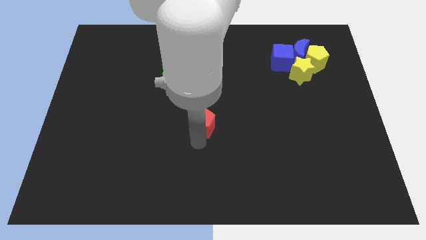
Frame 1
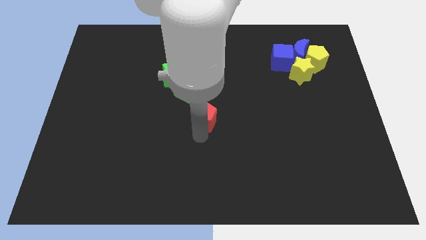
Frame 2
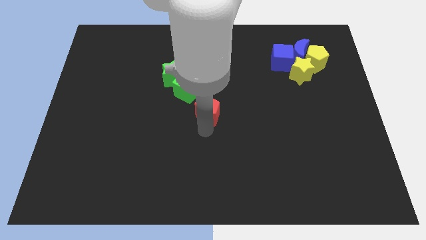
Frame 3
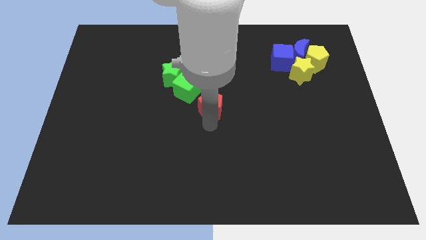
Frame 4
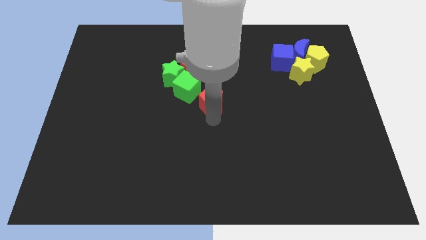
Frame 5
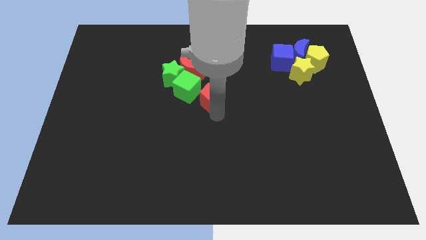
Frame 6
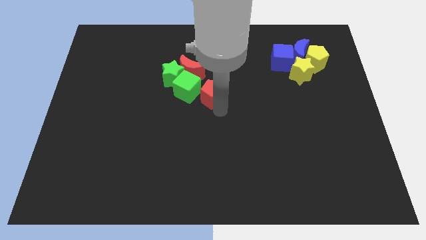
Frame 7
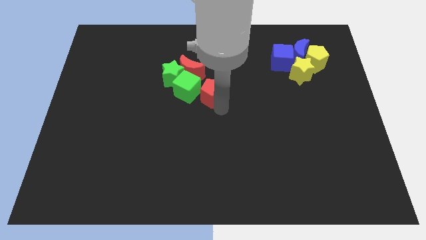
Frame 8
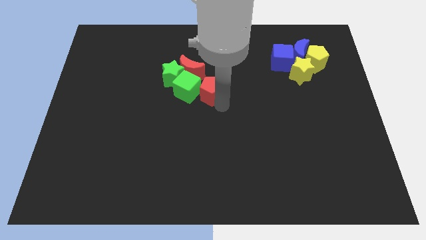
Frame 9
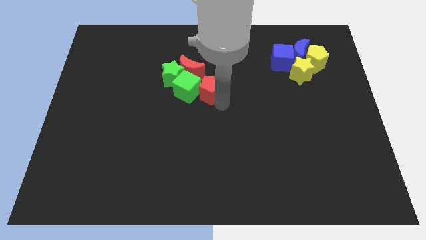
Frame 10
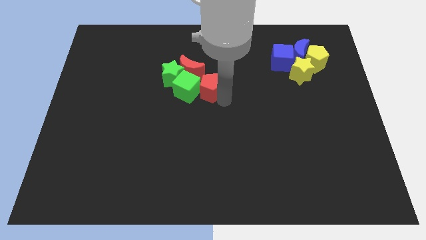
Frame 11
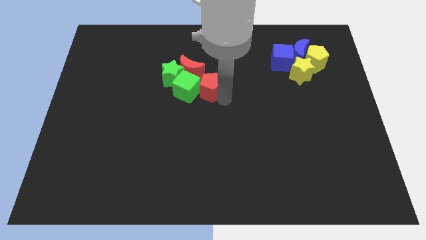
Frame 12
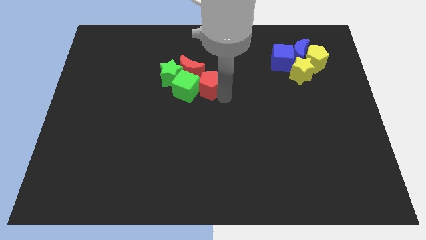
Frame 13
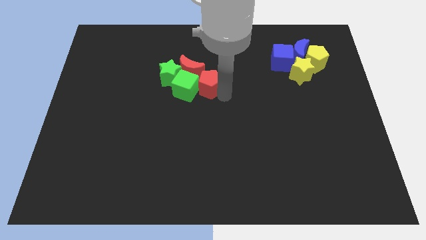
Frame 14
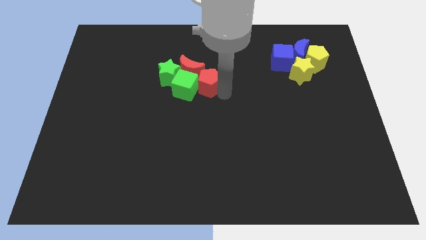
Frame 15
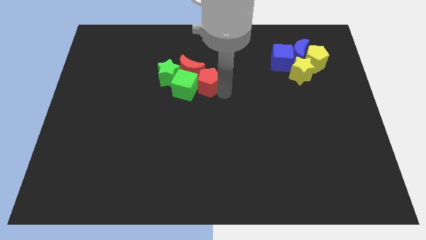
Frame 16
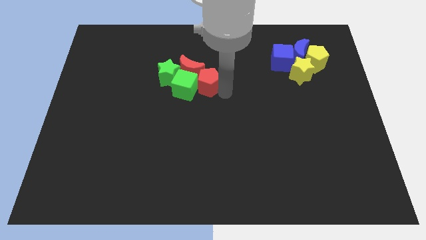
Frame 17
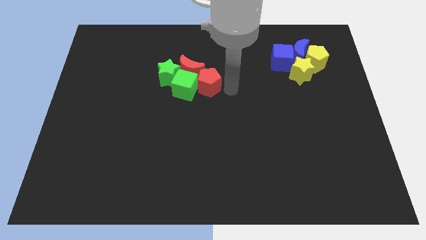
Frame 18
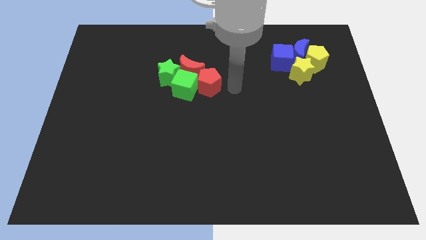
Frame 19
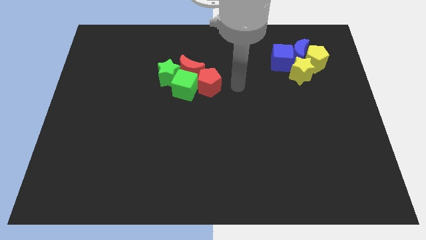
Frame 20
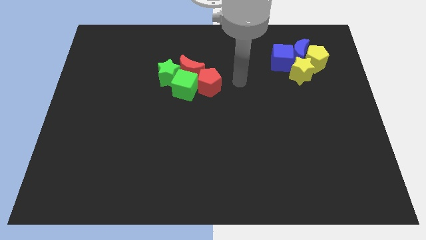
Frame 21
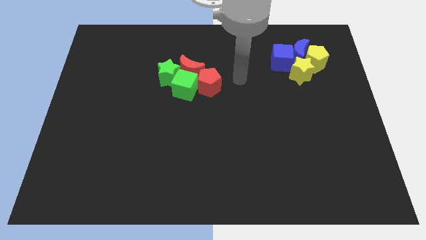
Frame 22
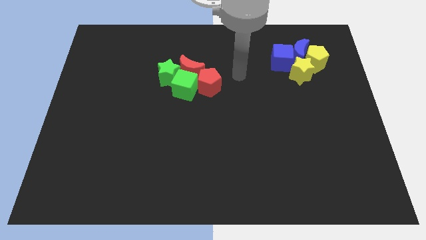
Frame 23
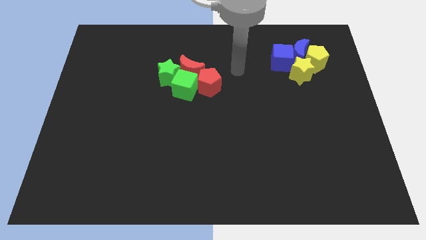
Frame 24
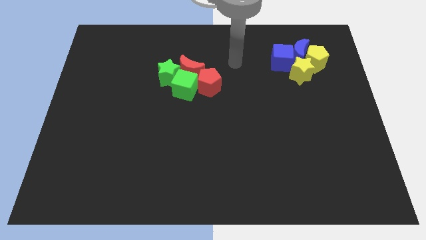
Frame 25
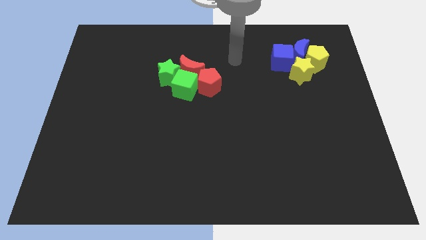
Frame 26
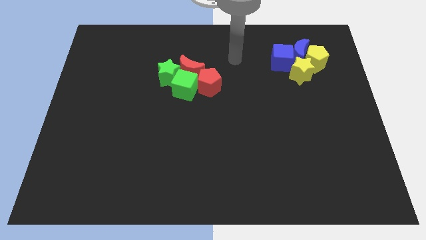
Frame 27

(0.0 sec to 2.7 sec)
make a group of red and green blocks

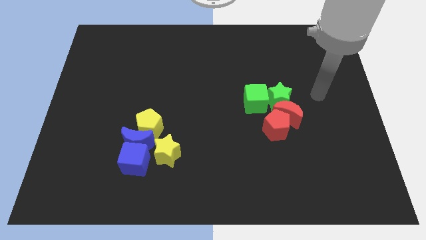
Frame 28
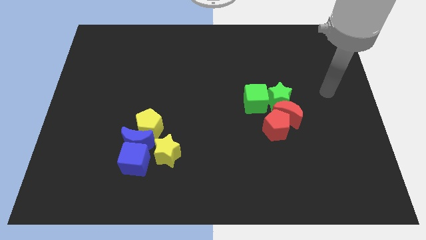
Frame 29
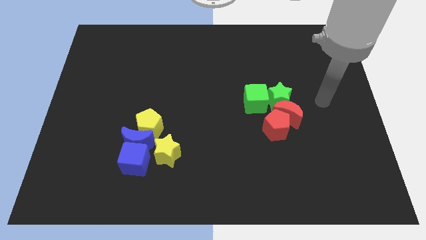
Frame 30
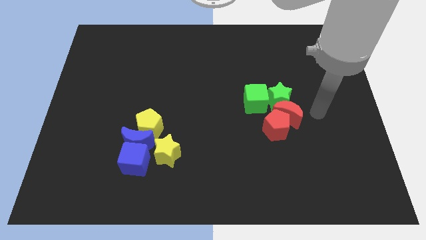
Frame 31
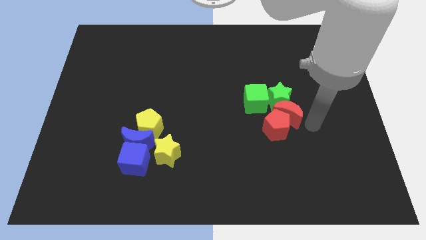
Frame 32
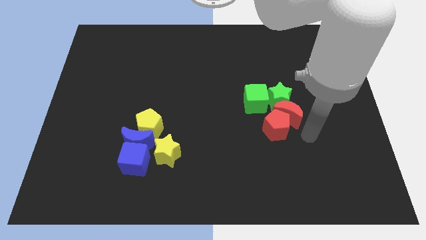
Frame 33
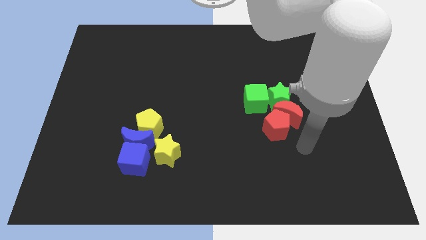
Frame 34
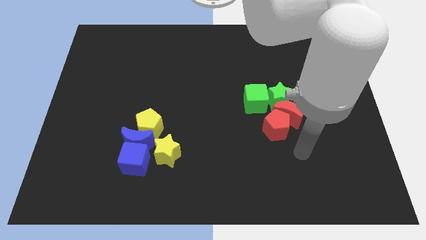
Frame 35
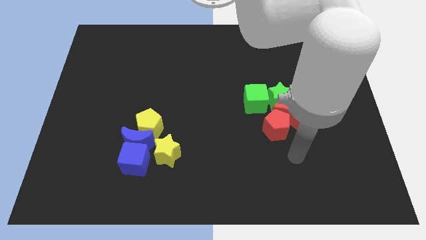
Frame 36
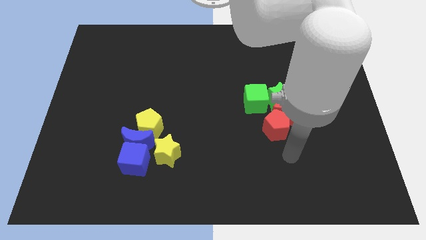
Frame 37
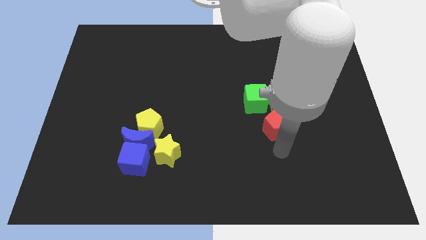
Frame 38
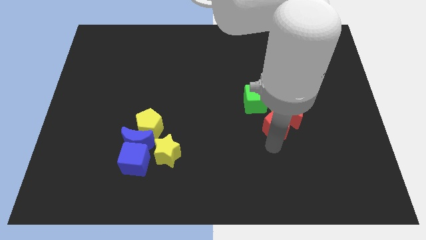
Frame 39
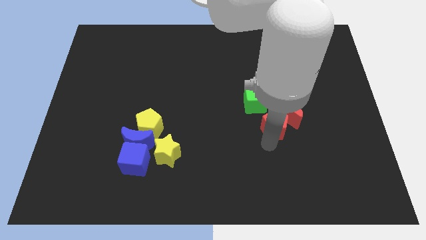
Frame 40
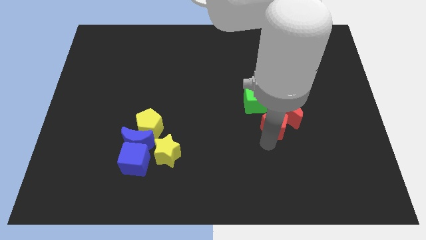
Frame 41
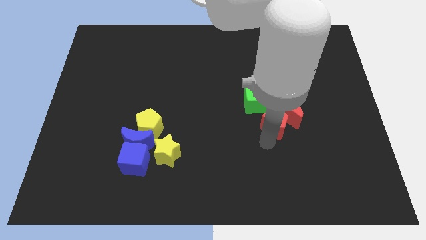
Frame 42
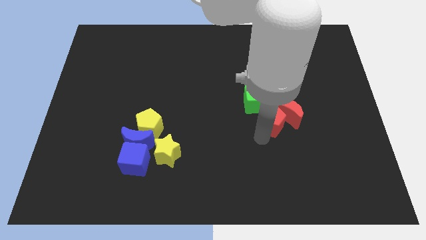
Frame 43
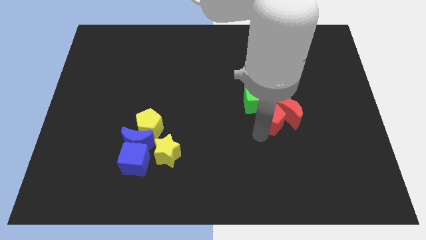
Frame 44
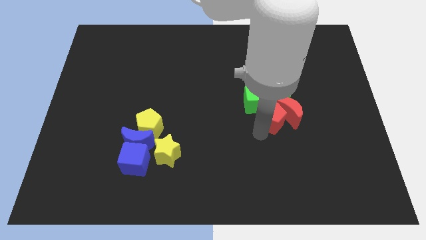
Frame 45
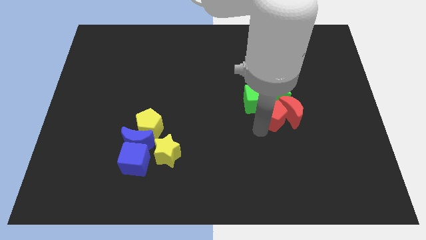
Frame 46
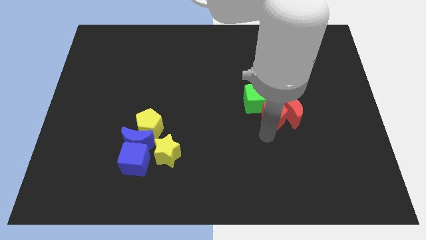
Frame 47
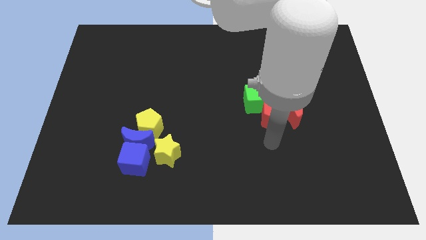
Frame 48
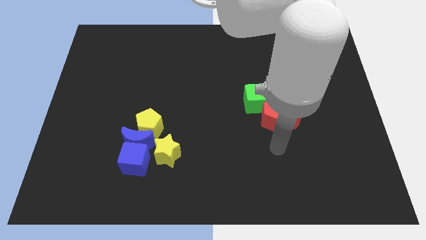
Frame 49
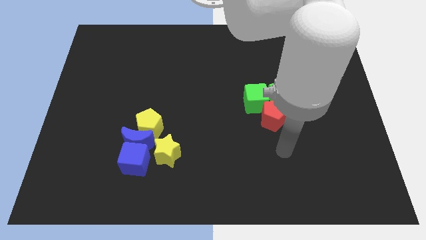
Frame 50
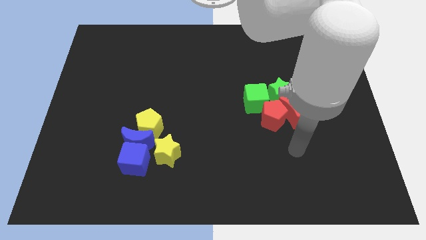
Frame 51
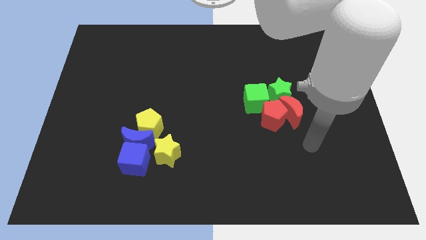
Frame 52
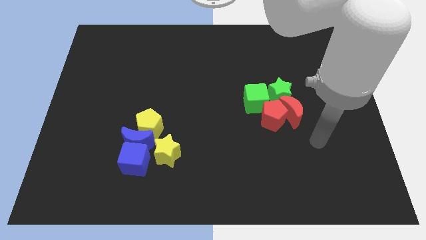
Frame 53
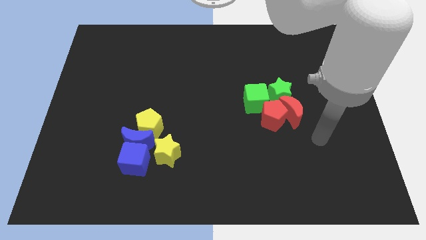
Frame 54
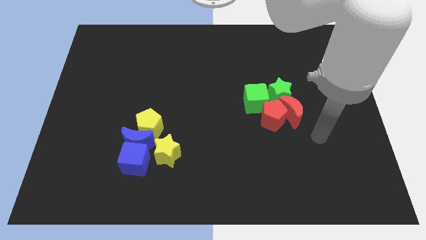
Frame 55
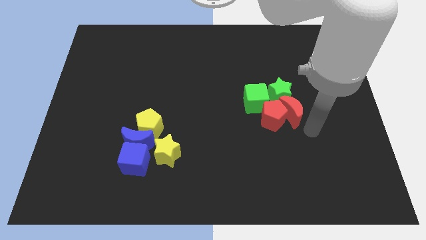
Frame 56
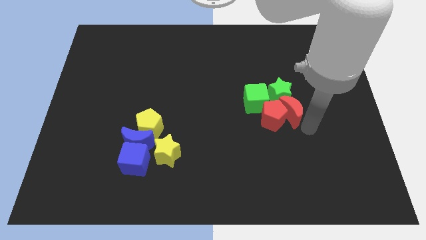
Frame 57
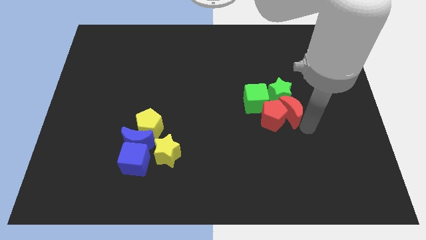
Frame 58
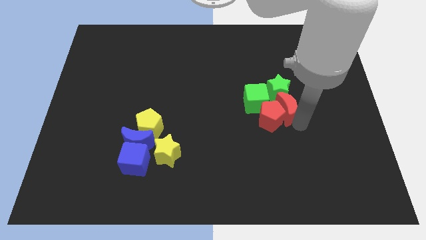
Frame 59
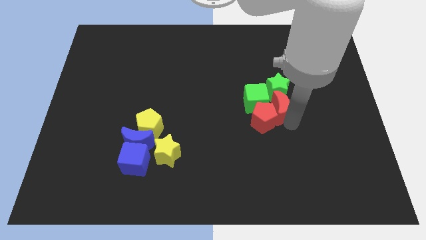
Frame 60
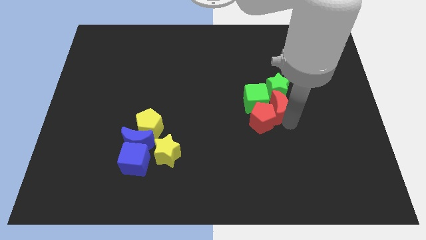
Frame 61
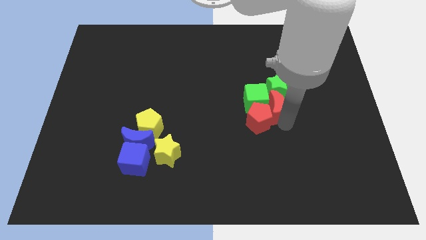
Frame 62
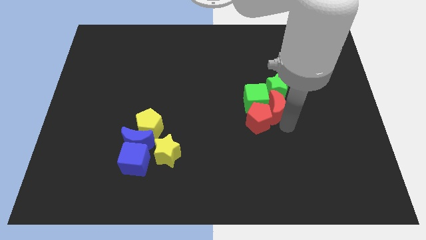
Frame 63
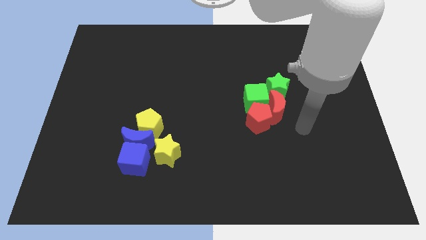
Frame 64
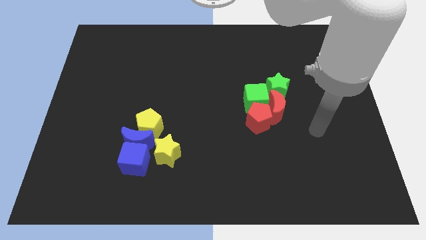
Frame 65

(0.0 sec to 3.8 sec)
move the red blocks into green blocks

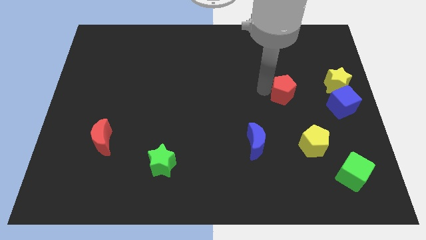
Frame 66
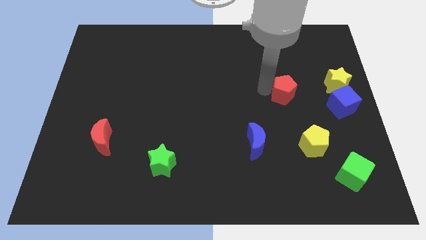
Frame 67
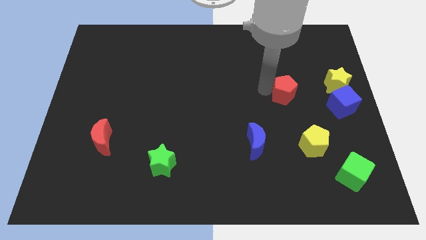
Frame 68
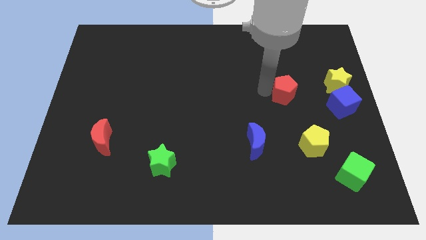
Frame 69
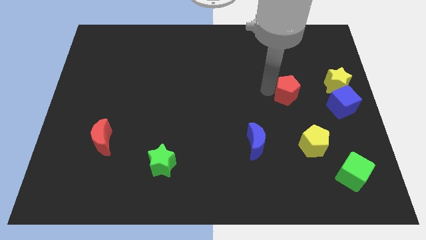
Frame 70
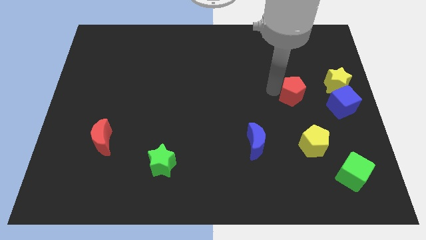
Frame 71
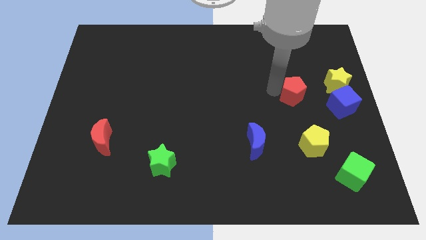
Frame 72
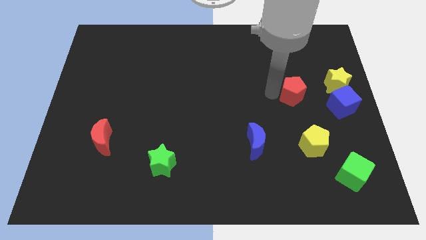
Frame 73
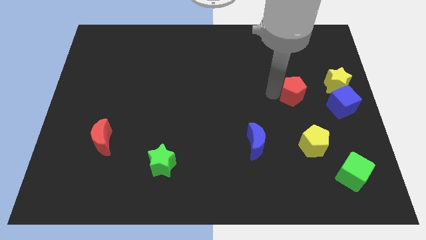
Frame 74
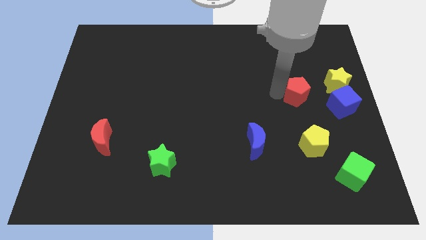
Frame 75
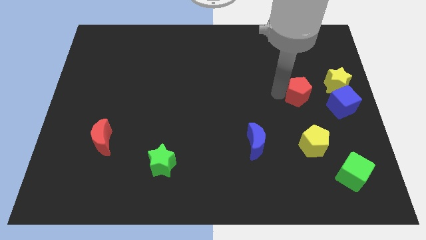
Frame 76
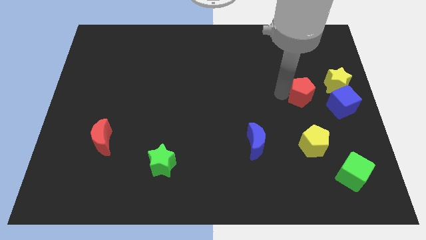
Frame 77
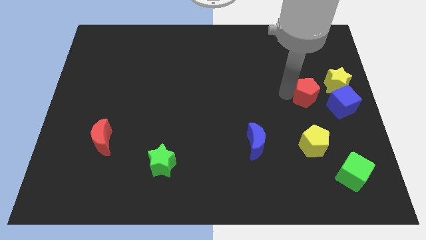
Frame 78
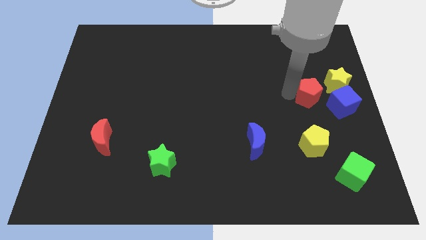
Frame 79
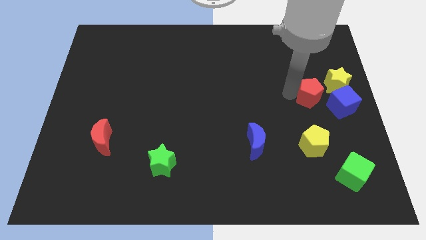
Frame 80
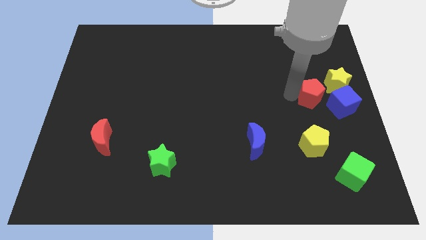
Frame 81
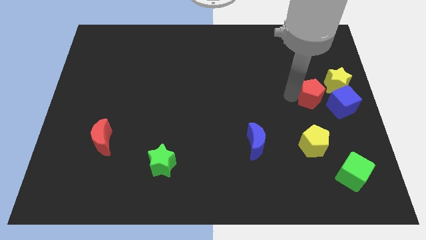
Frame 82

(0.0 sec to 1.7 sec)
place red pentagon left to blue cube

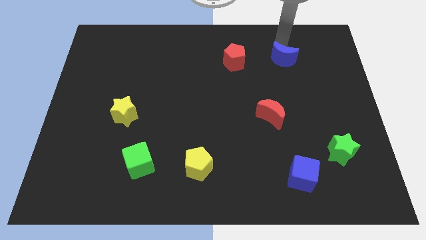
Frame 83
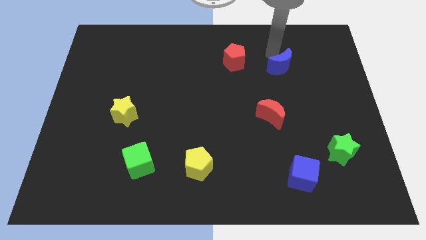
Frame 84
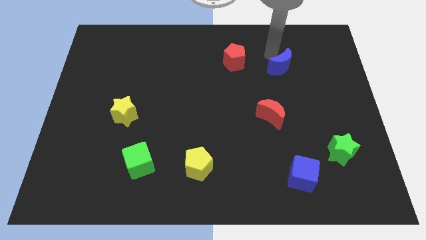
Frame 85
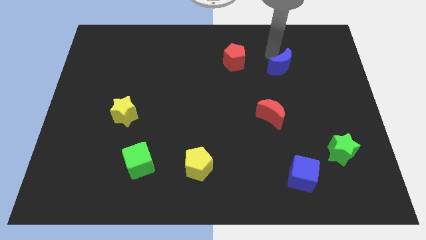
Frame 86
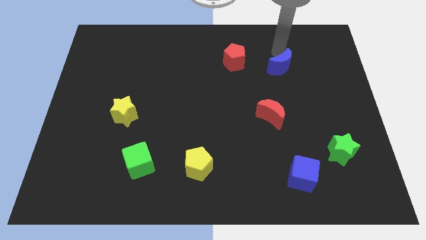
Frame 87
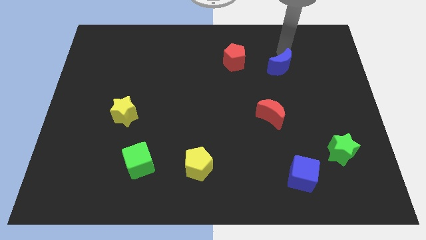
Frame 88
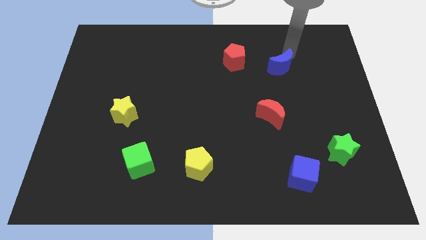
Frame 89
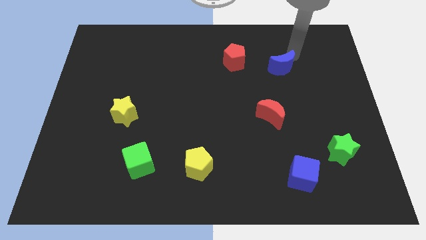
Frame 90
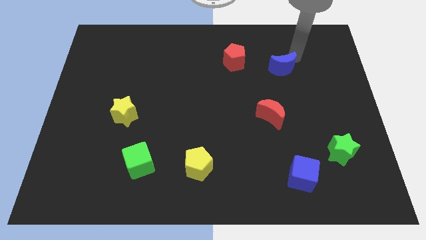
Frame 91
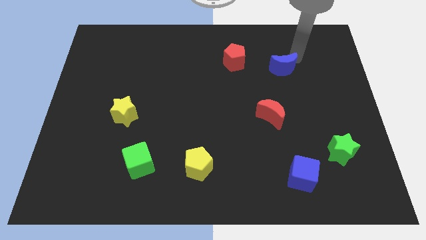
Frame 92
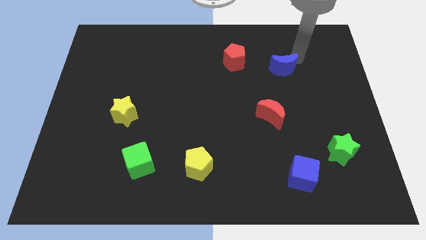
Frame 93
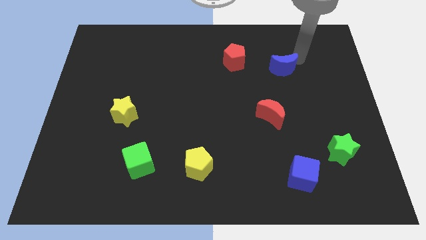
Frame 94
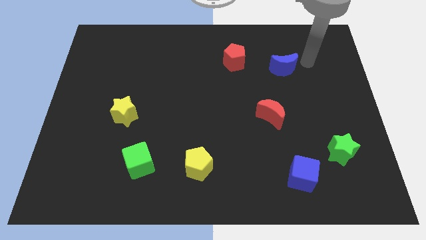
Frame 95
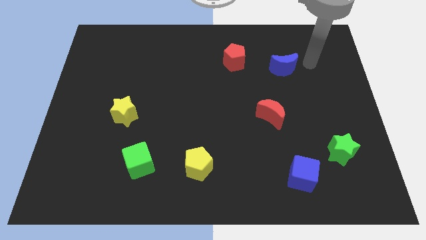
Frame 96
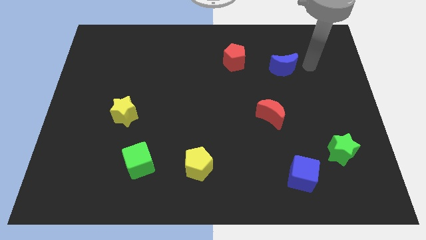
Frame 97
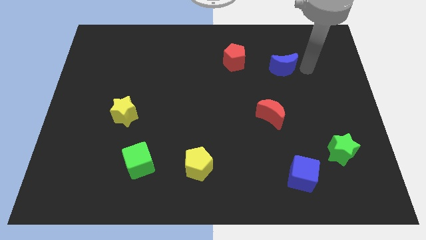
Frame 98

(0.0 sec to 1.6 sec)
move arm to the right side of the blue moon
